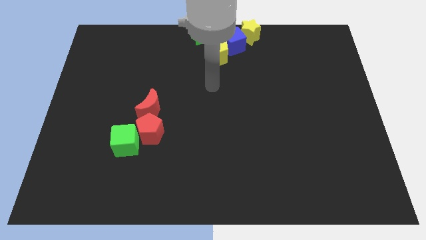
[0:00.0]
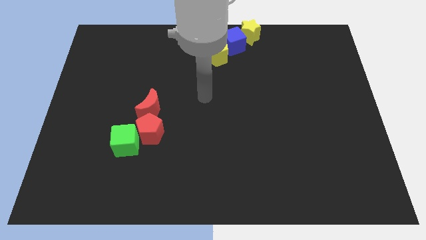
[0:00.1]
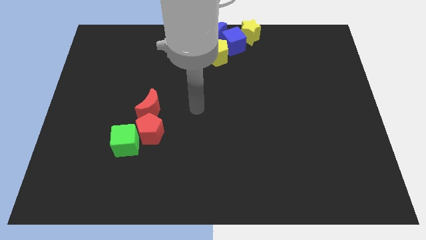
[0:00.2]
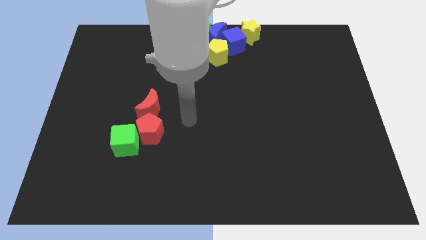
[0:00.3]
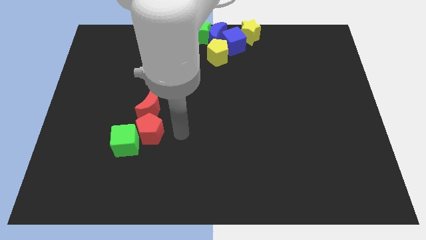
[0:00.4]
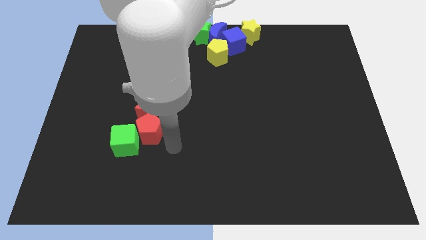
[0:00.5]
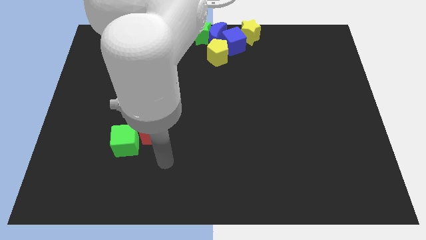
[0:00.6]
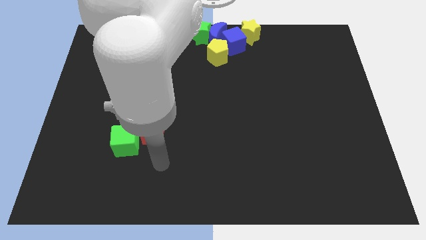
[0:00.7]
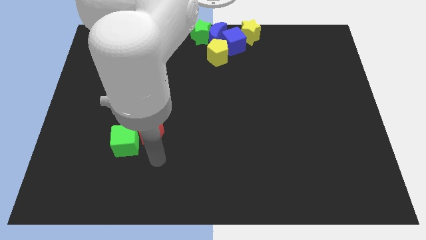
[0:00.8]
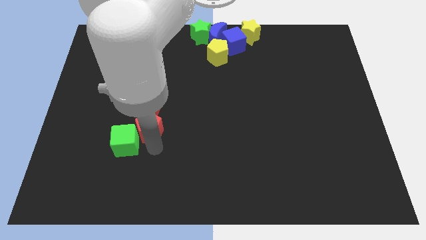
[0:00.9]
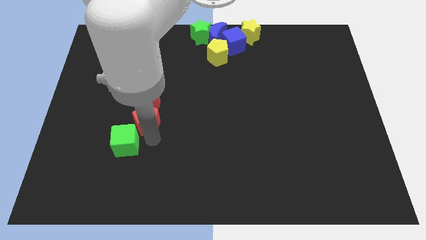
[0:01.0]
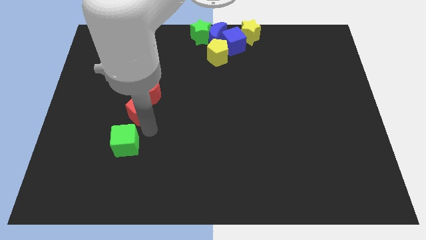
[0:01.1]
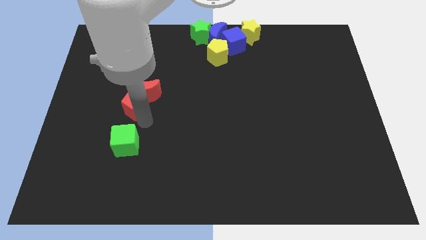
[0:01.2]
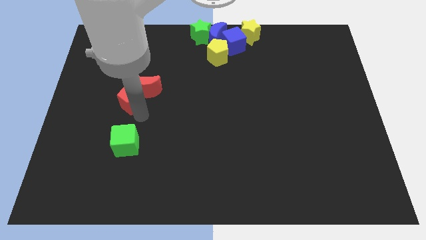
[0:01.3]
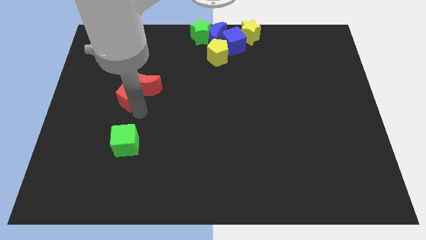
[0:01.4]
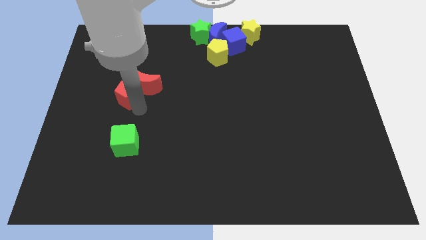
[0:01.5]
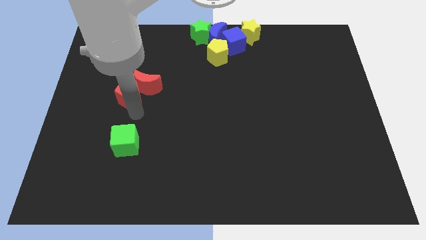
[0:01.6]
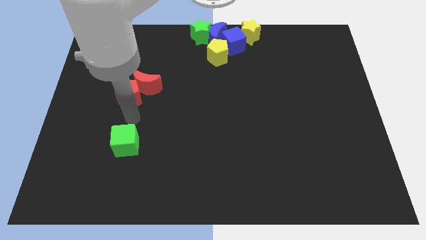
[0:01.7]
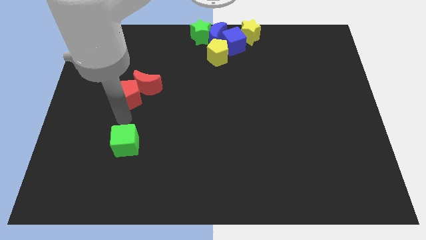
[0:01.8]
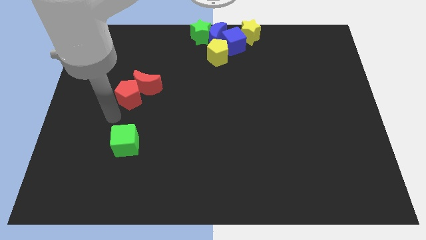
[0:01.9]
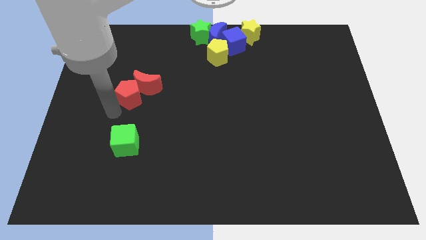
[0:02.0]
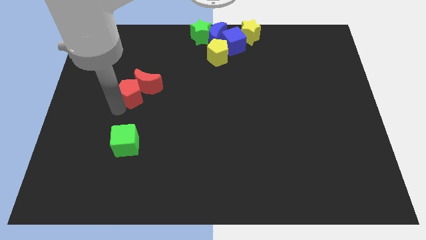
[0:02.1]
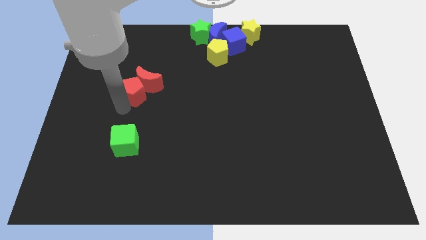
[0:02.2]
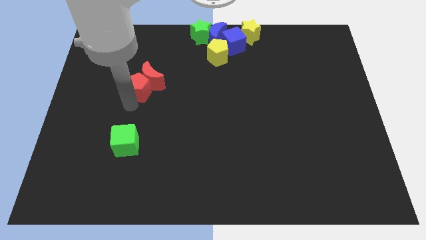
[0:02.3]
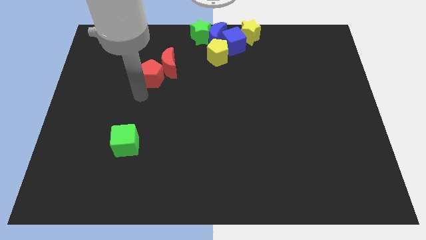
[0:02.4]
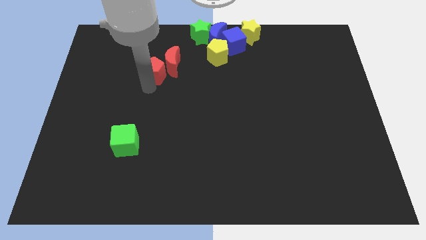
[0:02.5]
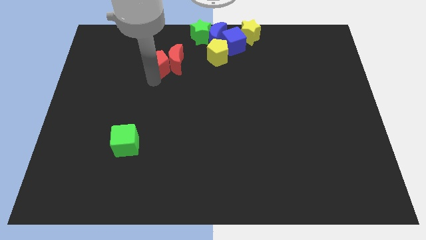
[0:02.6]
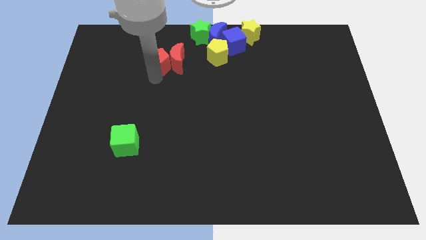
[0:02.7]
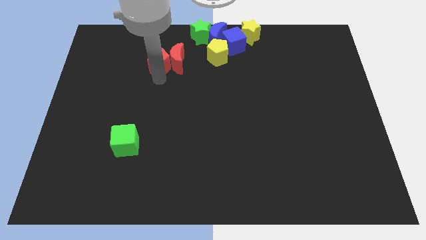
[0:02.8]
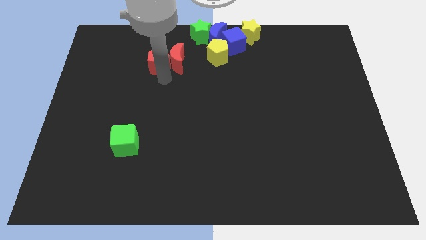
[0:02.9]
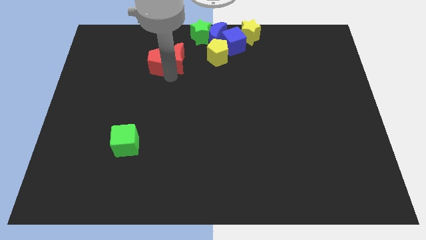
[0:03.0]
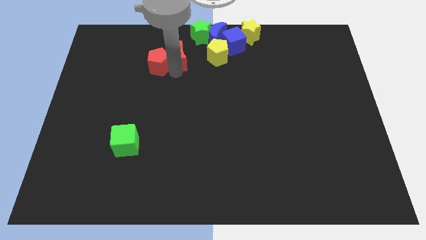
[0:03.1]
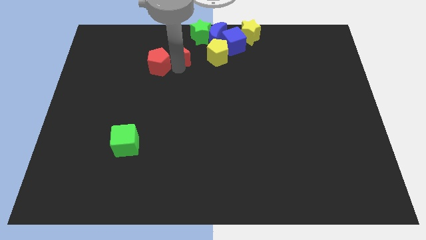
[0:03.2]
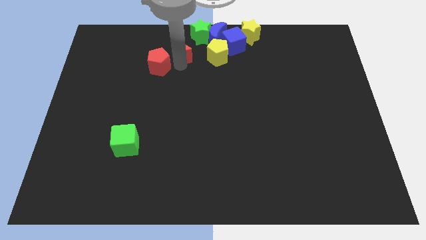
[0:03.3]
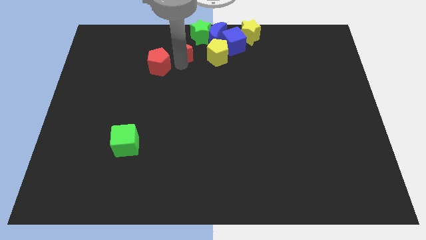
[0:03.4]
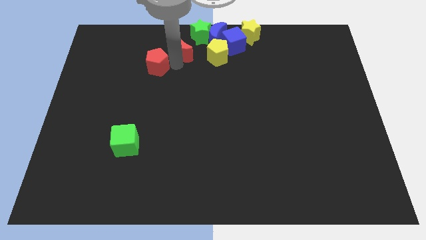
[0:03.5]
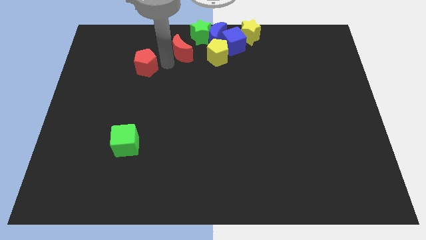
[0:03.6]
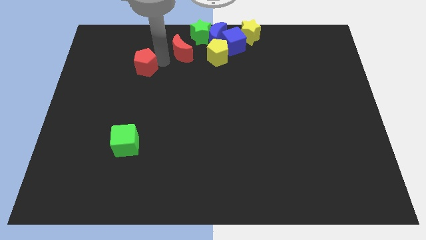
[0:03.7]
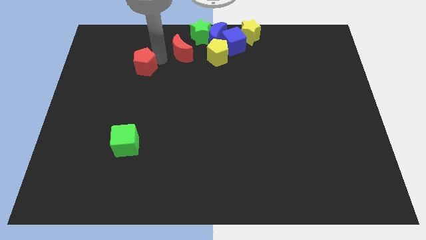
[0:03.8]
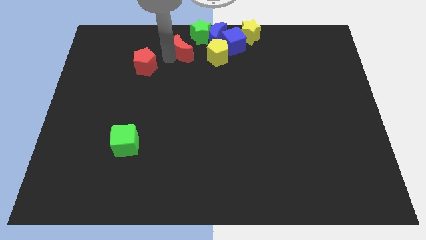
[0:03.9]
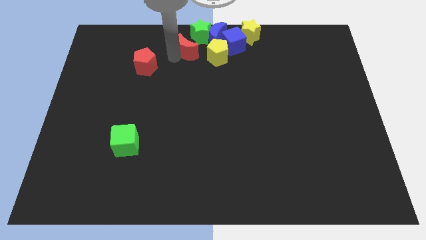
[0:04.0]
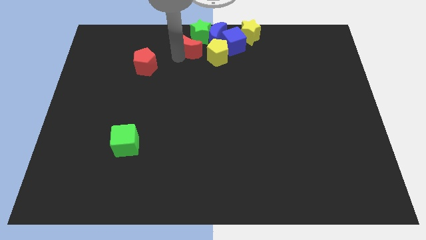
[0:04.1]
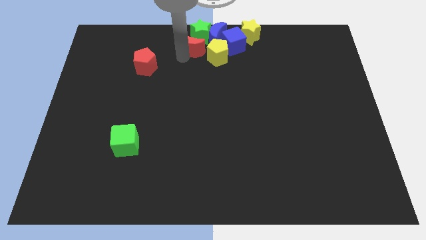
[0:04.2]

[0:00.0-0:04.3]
move the red crescent to the group of blocks

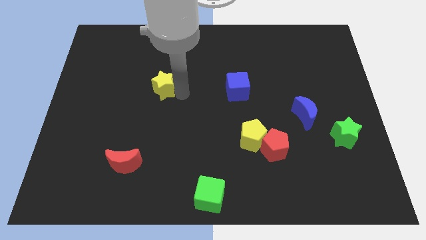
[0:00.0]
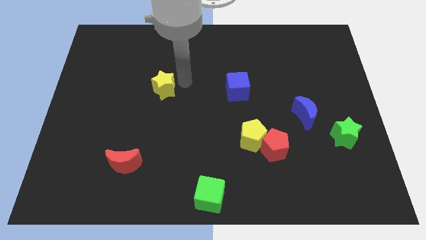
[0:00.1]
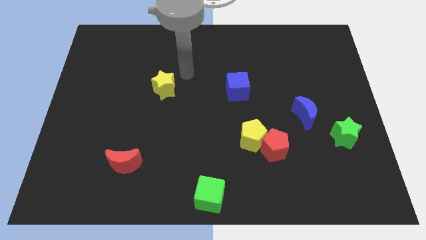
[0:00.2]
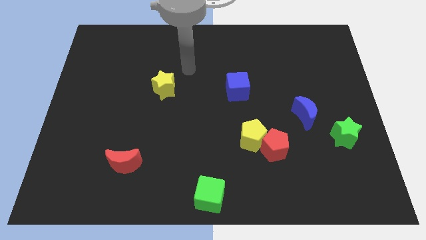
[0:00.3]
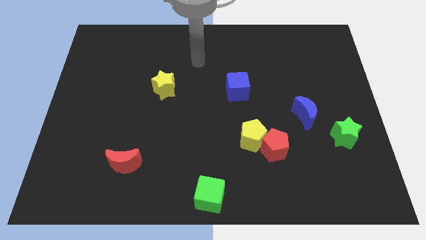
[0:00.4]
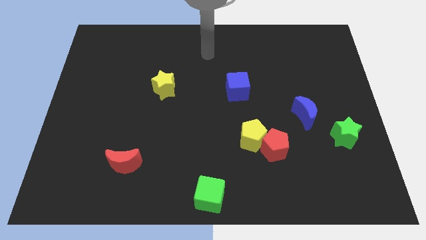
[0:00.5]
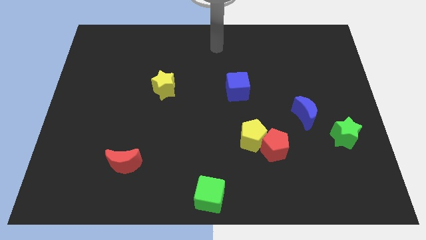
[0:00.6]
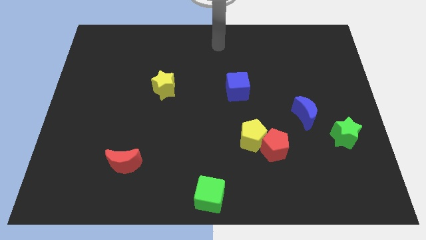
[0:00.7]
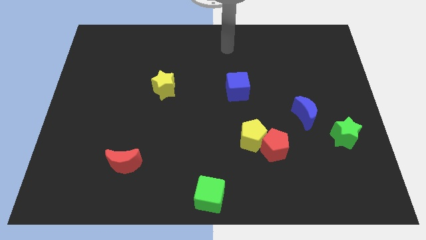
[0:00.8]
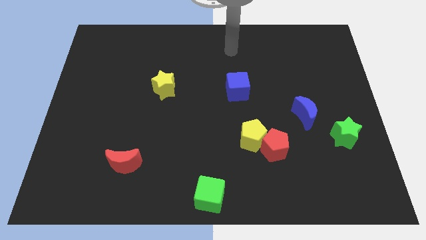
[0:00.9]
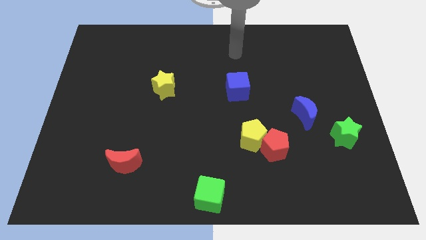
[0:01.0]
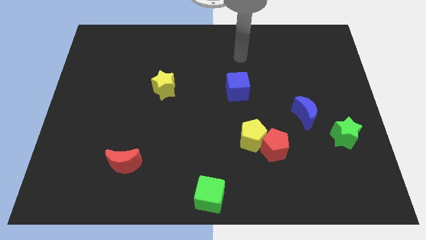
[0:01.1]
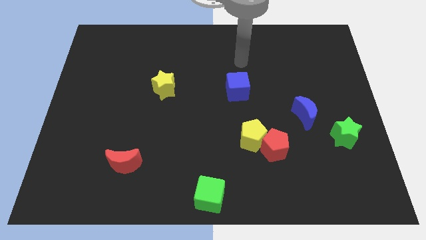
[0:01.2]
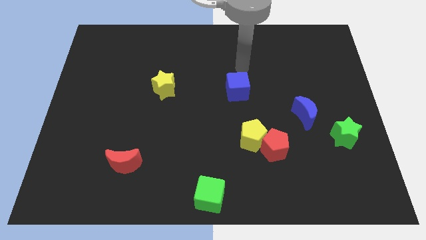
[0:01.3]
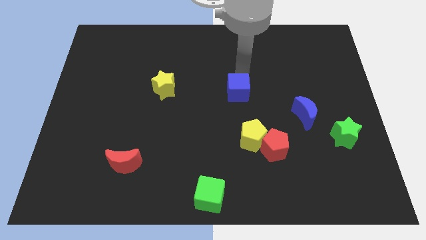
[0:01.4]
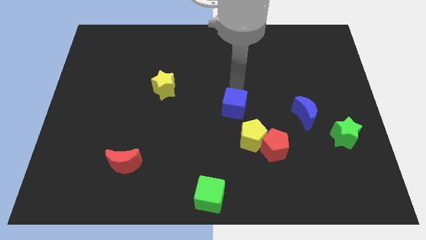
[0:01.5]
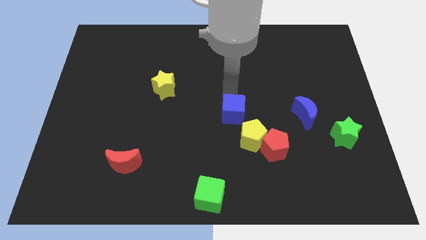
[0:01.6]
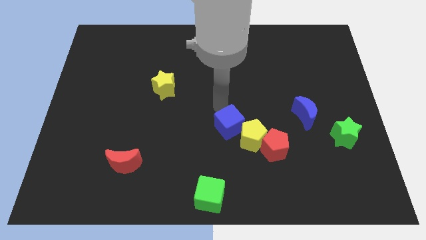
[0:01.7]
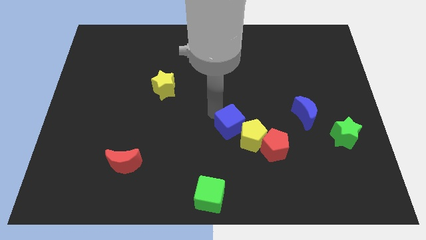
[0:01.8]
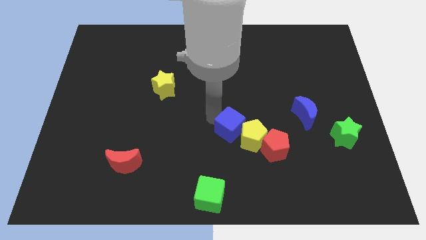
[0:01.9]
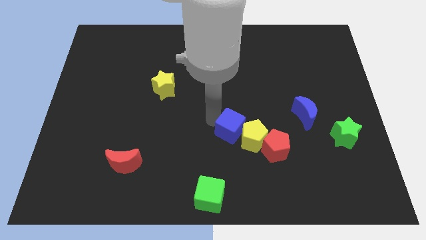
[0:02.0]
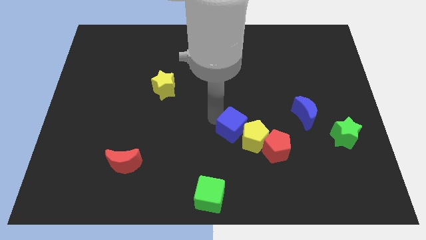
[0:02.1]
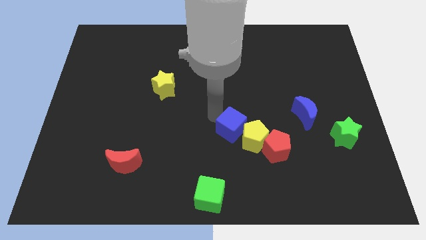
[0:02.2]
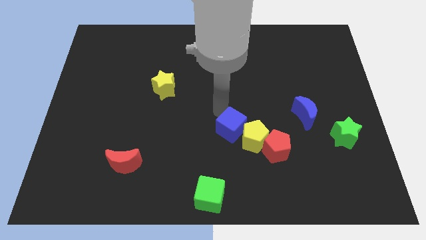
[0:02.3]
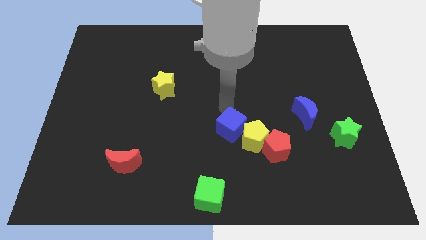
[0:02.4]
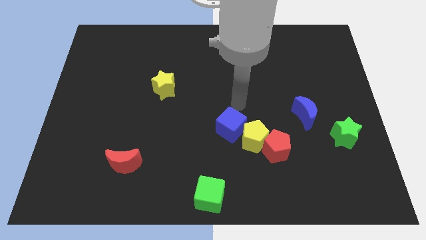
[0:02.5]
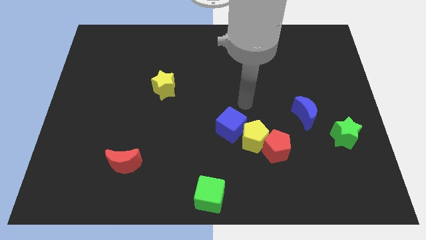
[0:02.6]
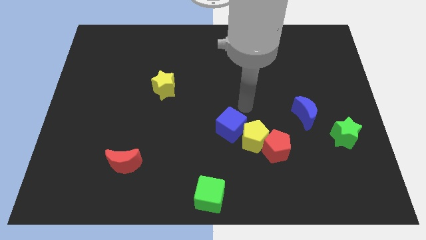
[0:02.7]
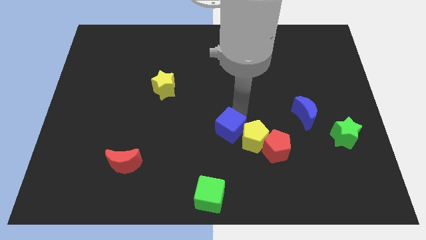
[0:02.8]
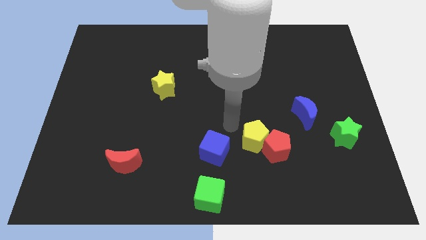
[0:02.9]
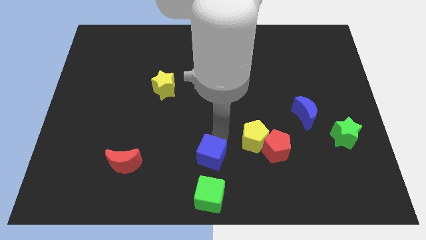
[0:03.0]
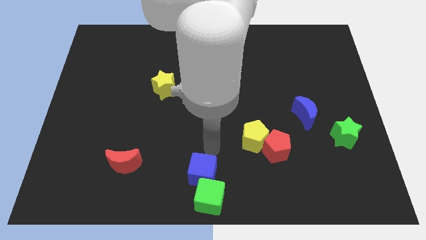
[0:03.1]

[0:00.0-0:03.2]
place the blue cube above the green cube

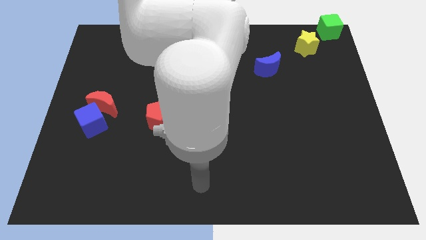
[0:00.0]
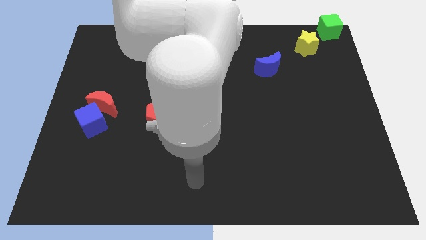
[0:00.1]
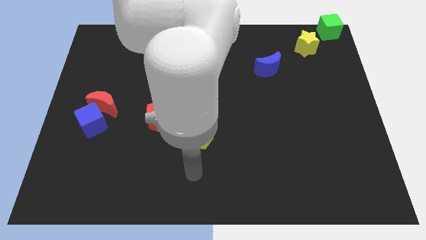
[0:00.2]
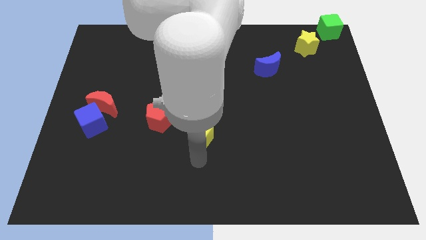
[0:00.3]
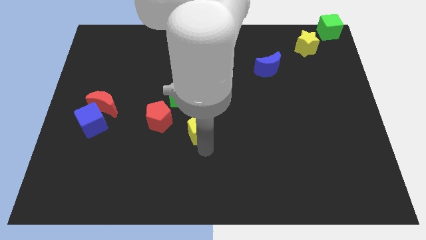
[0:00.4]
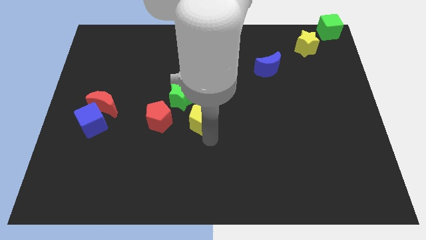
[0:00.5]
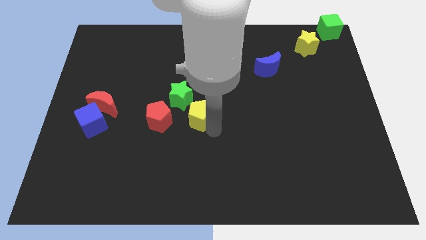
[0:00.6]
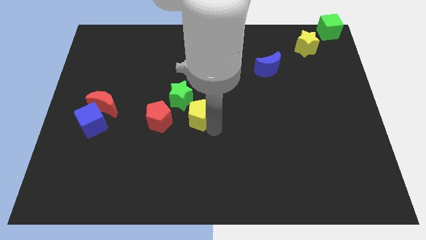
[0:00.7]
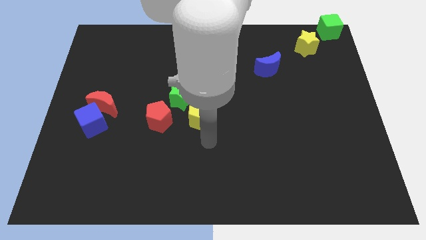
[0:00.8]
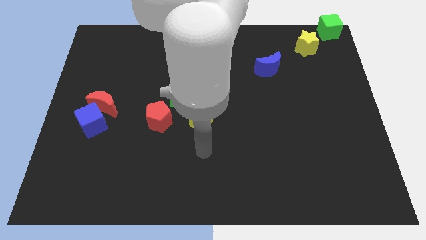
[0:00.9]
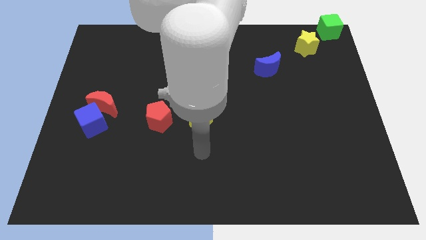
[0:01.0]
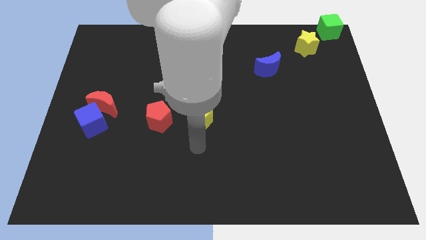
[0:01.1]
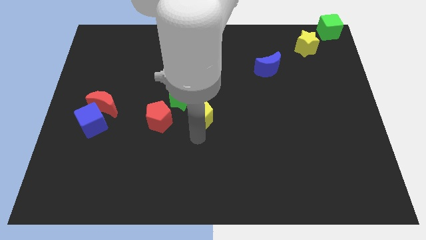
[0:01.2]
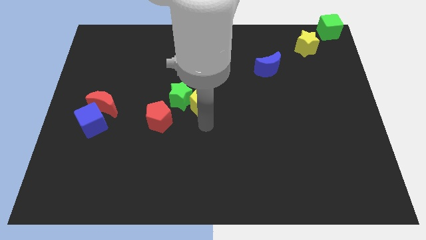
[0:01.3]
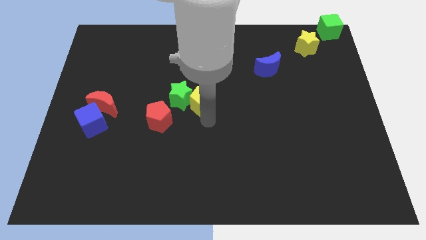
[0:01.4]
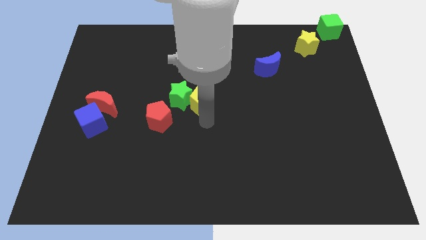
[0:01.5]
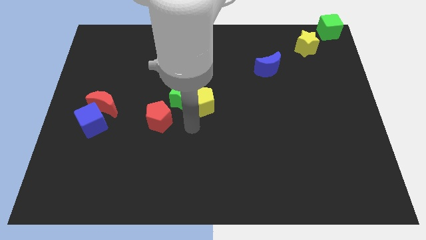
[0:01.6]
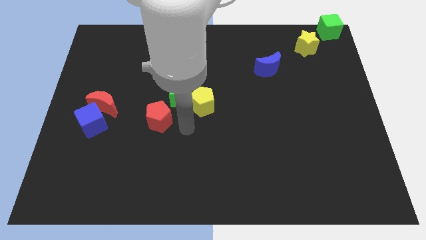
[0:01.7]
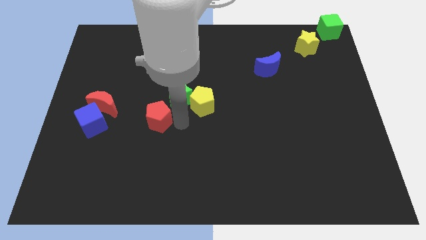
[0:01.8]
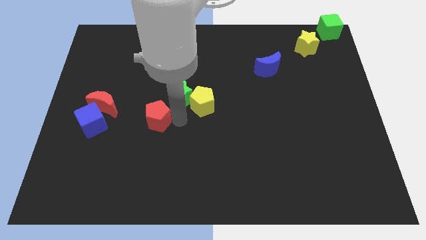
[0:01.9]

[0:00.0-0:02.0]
move the yellow pentagon into the green star
